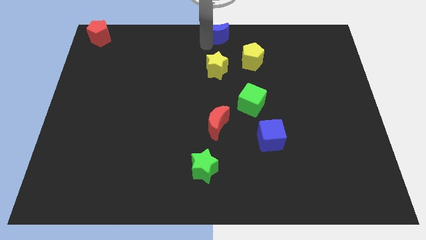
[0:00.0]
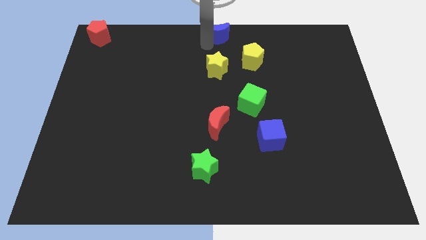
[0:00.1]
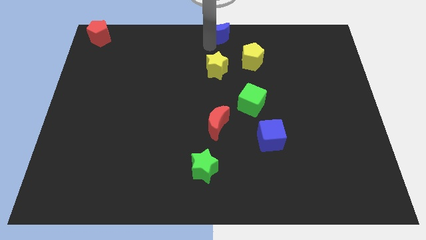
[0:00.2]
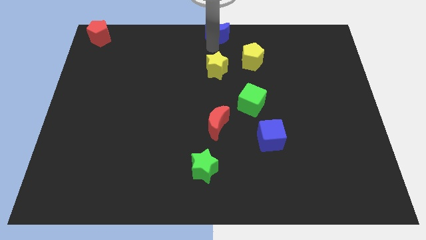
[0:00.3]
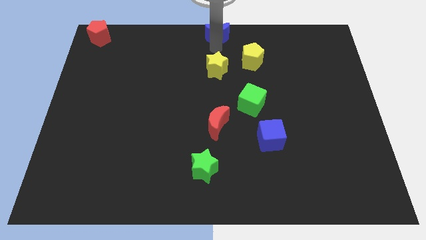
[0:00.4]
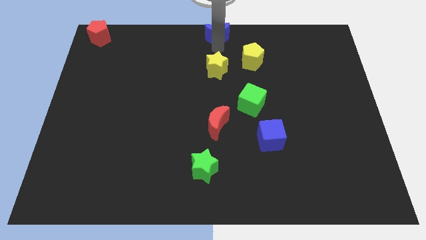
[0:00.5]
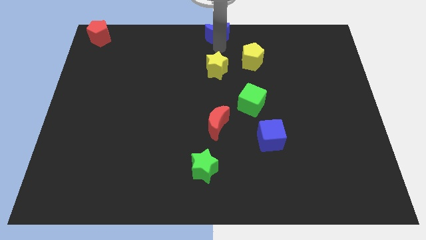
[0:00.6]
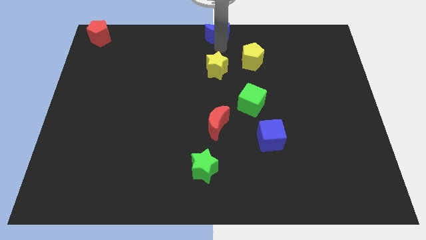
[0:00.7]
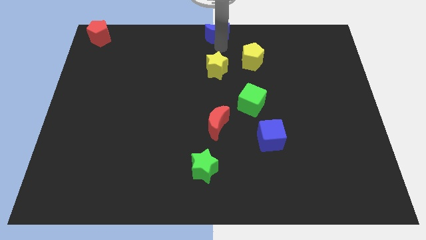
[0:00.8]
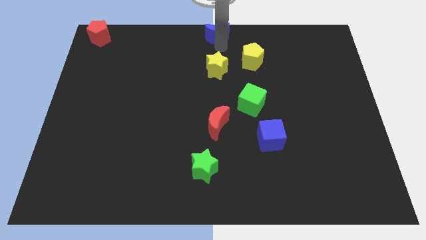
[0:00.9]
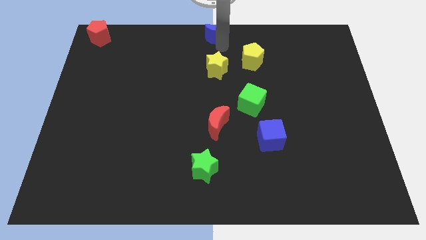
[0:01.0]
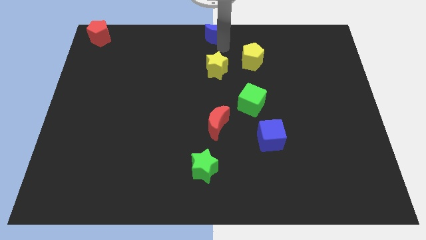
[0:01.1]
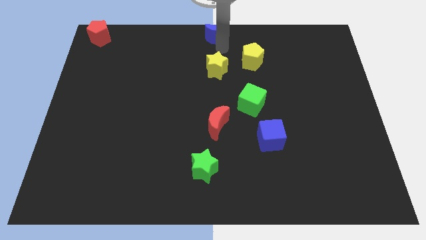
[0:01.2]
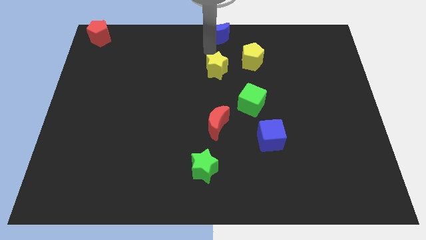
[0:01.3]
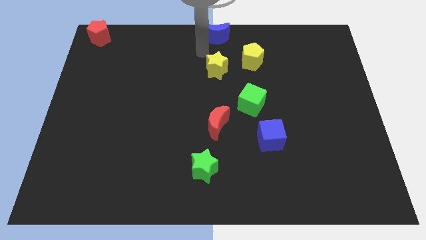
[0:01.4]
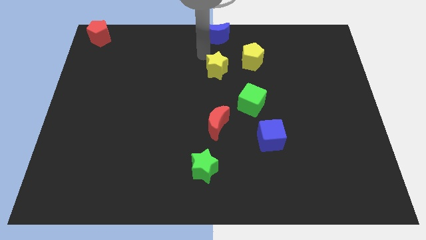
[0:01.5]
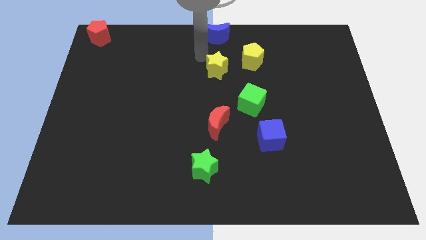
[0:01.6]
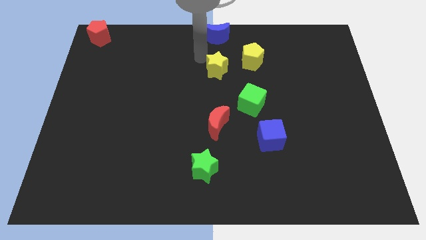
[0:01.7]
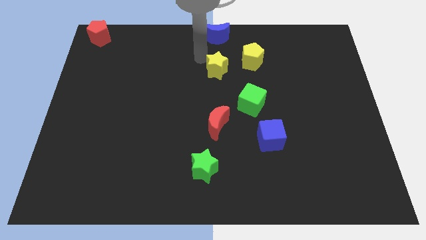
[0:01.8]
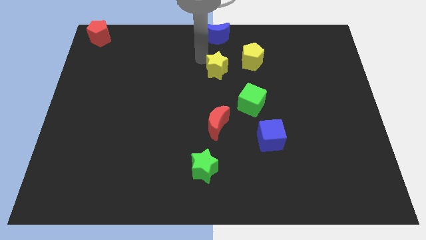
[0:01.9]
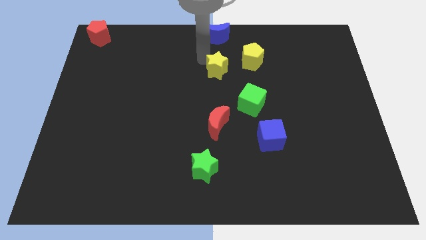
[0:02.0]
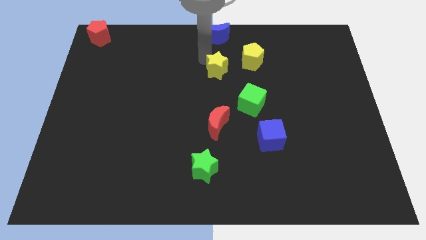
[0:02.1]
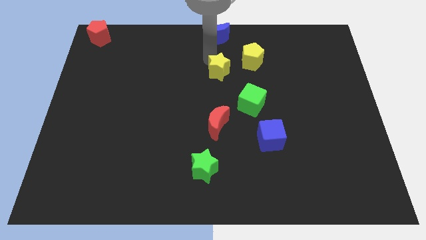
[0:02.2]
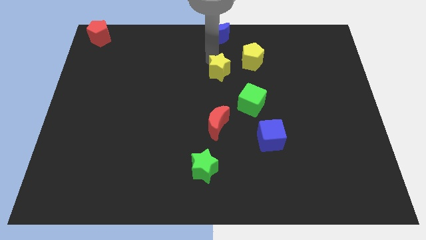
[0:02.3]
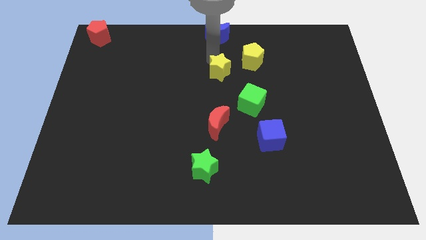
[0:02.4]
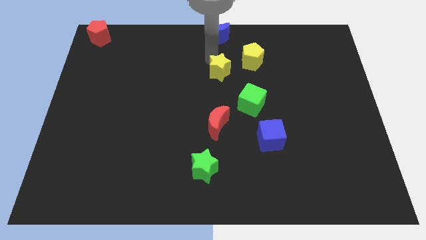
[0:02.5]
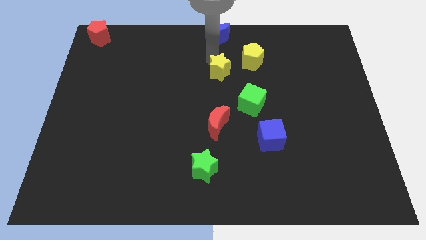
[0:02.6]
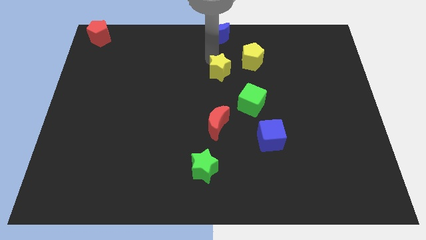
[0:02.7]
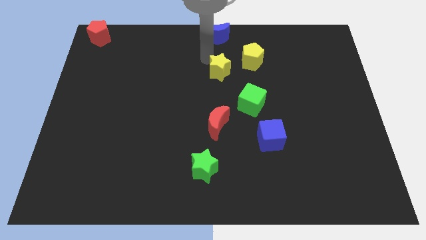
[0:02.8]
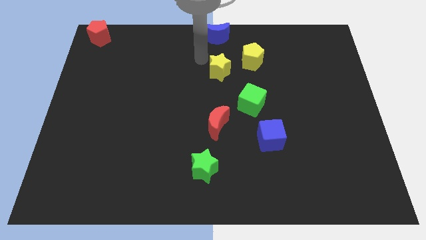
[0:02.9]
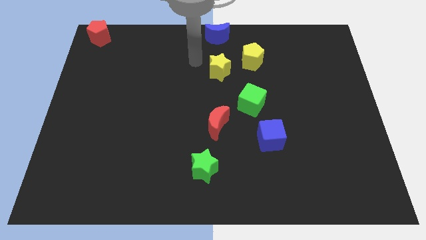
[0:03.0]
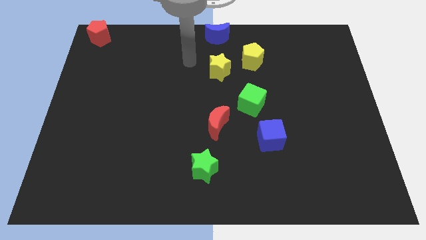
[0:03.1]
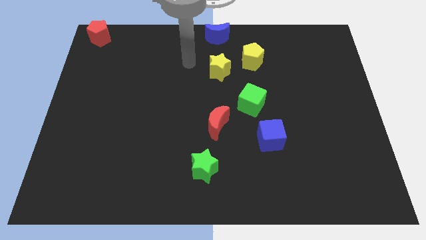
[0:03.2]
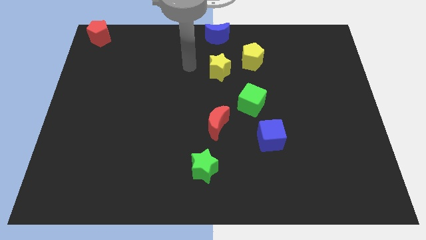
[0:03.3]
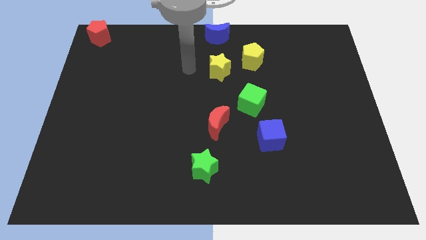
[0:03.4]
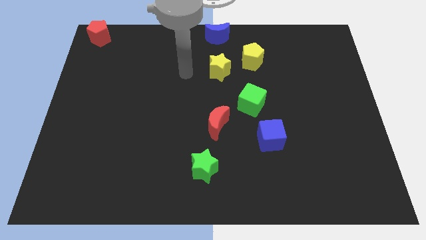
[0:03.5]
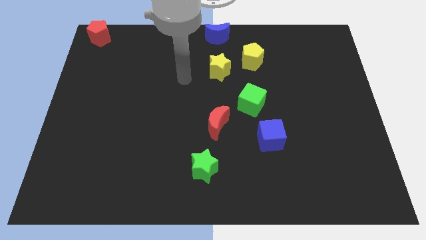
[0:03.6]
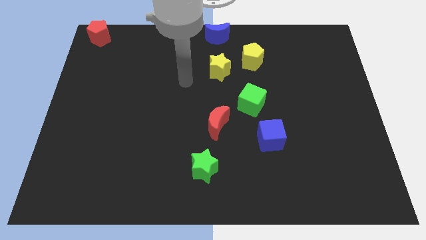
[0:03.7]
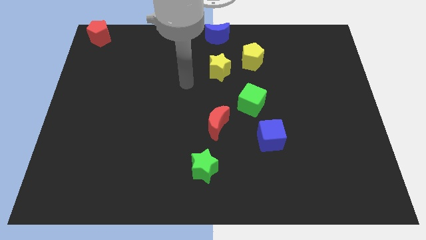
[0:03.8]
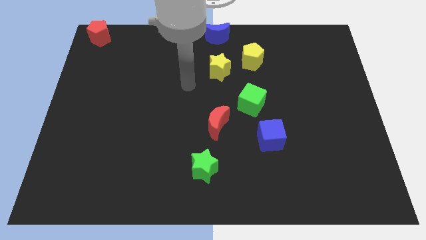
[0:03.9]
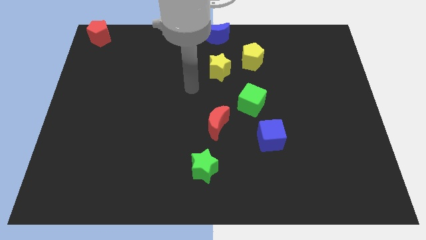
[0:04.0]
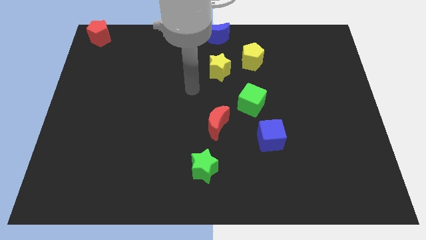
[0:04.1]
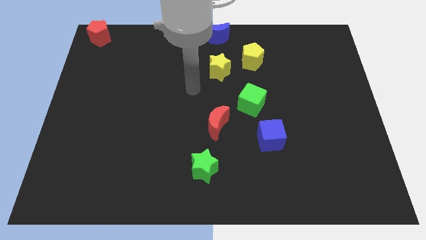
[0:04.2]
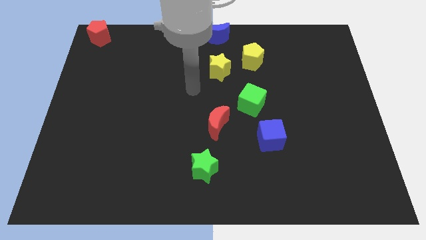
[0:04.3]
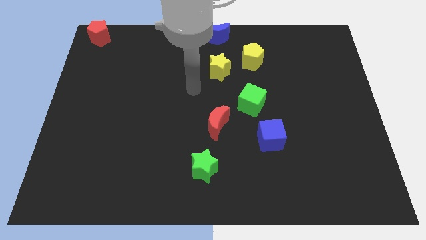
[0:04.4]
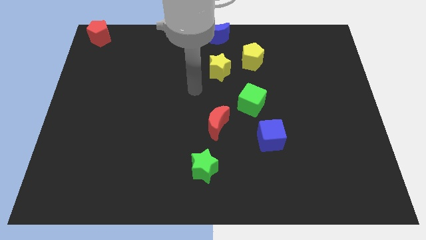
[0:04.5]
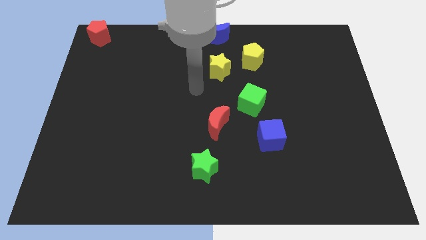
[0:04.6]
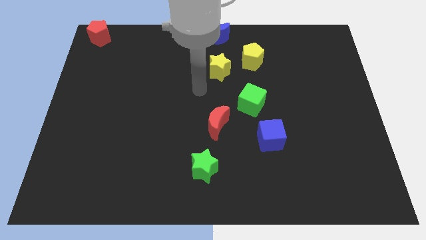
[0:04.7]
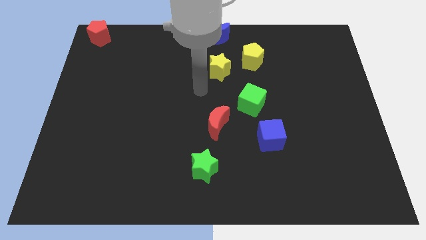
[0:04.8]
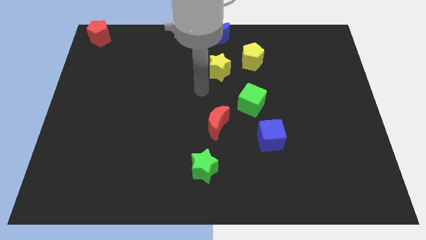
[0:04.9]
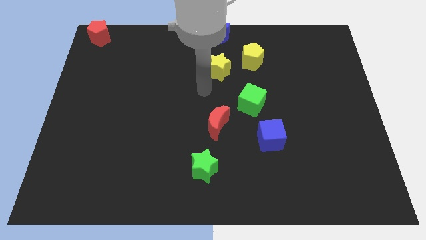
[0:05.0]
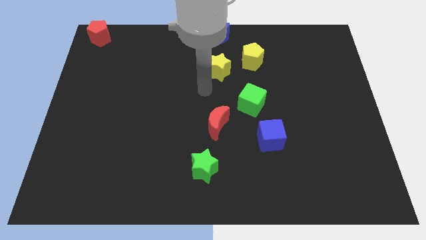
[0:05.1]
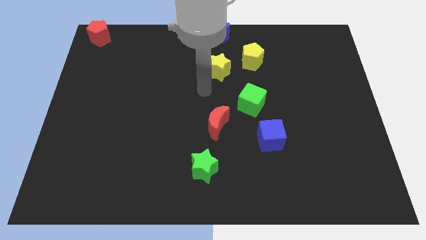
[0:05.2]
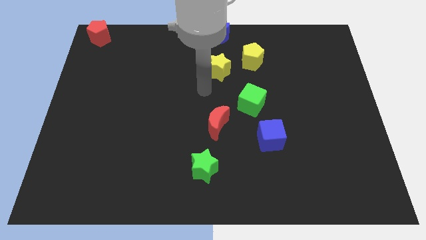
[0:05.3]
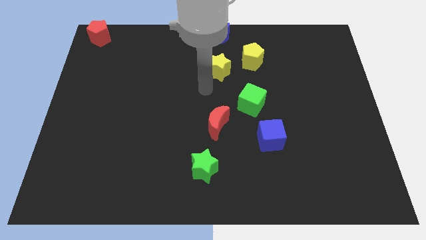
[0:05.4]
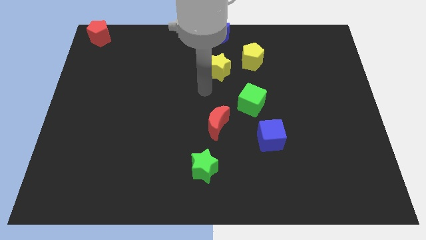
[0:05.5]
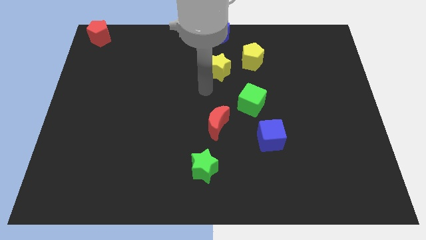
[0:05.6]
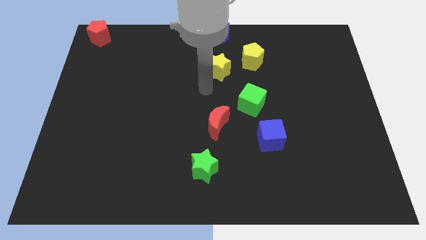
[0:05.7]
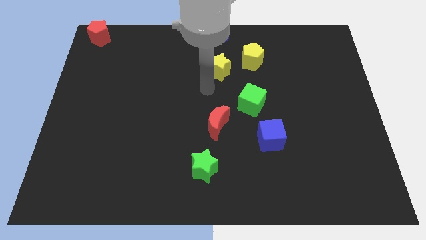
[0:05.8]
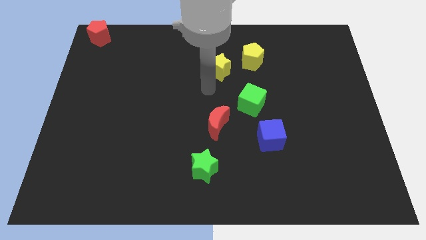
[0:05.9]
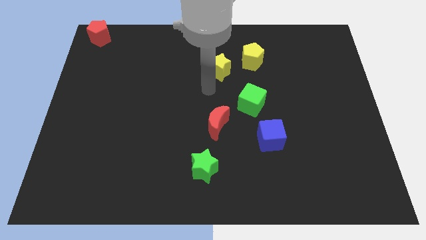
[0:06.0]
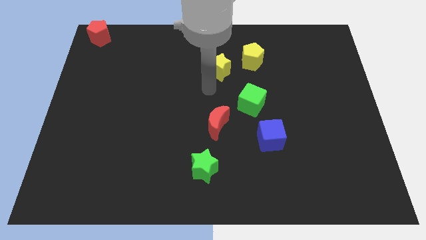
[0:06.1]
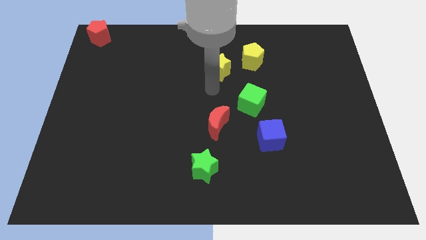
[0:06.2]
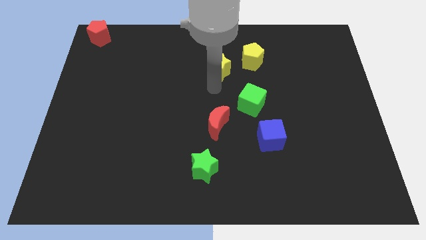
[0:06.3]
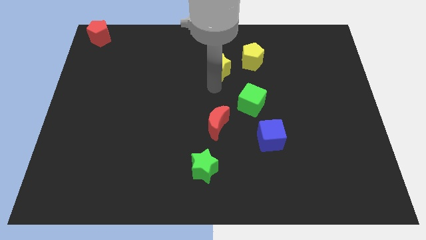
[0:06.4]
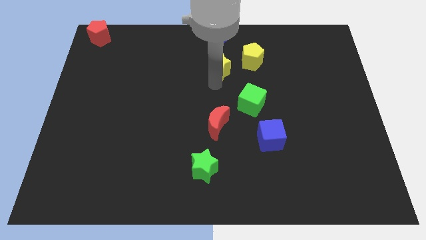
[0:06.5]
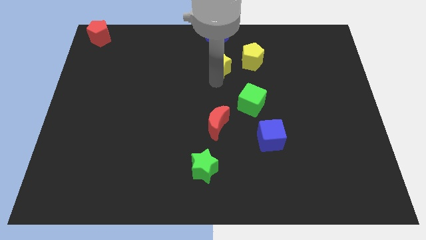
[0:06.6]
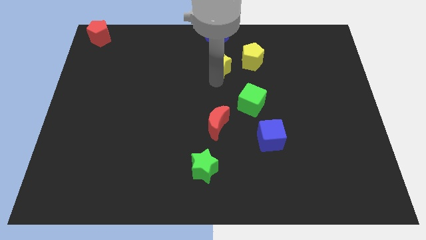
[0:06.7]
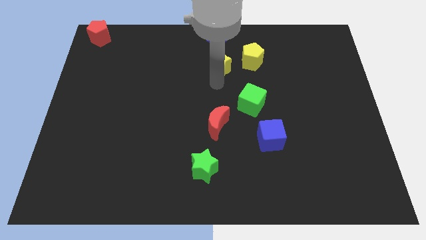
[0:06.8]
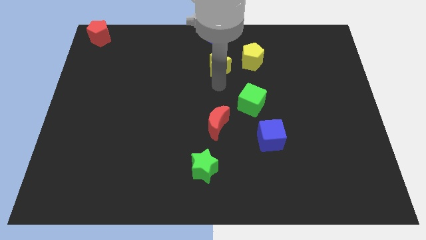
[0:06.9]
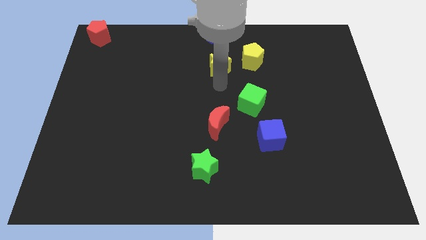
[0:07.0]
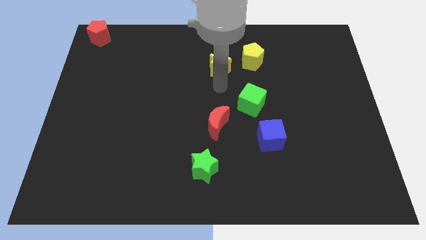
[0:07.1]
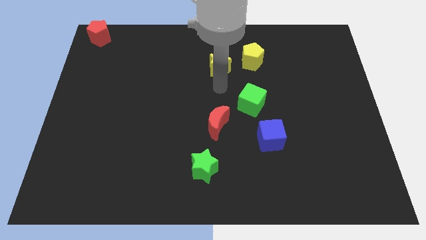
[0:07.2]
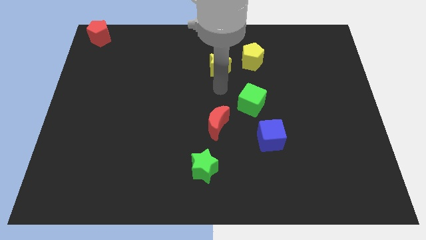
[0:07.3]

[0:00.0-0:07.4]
move your arm towards the yellow star on the top center of the board

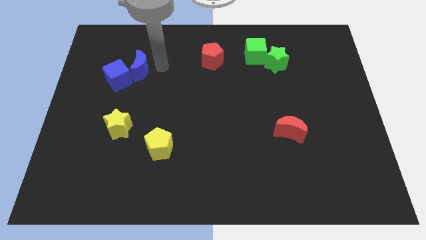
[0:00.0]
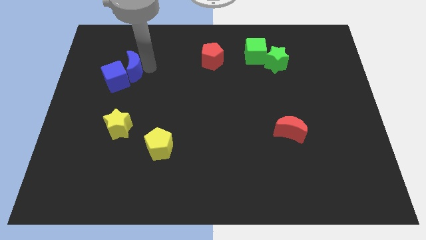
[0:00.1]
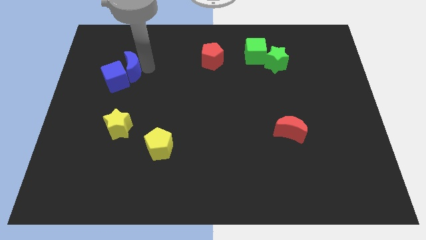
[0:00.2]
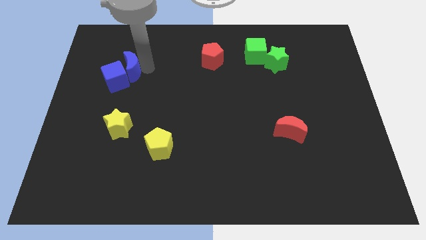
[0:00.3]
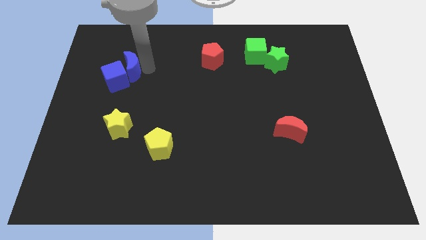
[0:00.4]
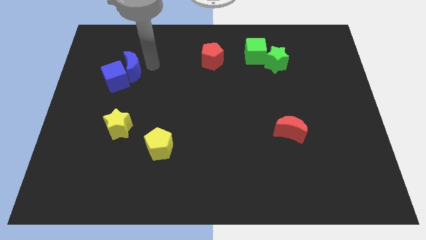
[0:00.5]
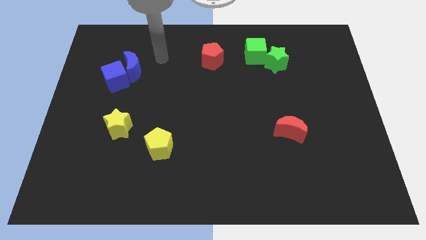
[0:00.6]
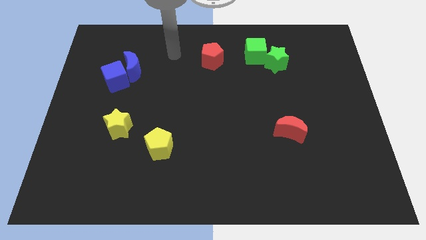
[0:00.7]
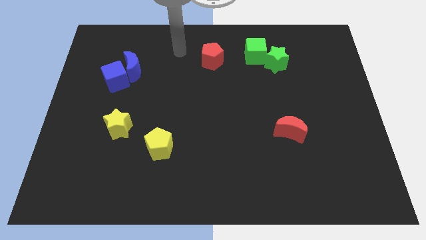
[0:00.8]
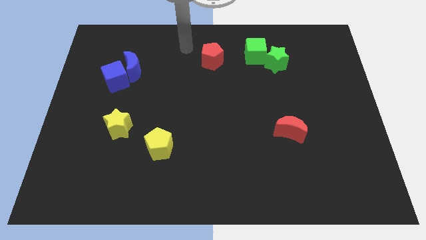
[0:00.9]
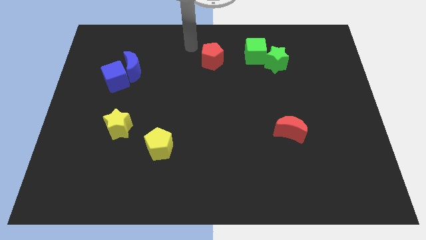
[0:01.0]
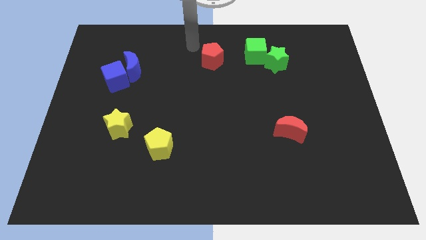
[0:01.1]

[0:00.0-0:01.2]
push blue moon into blue cube

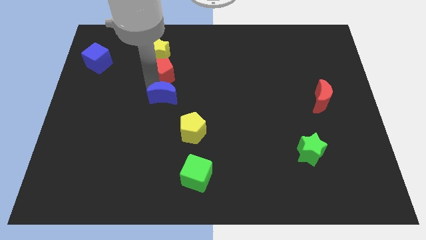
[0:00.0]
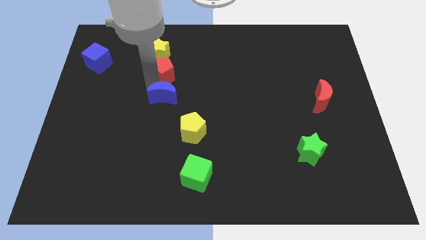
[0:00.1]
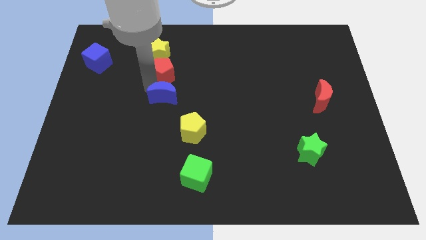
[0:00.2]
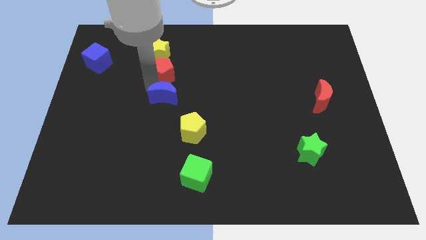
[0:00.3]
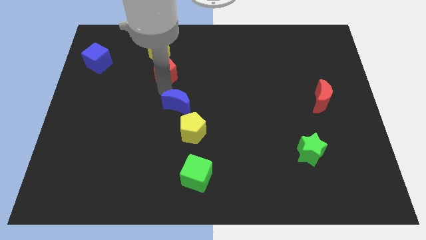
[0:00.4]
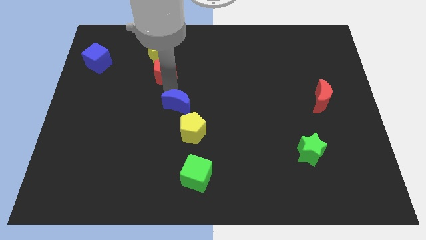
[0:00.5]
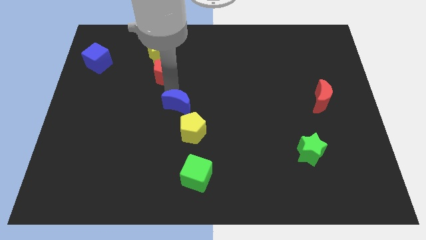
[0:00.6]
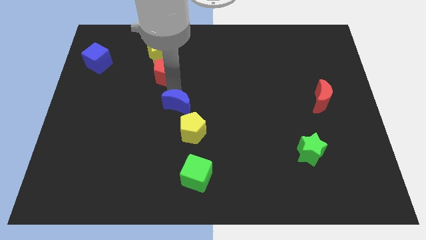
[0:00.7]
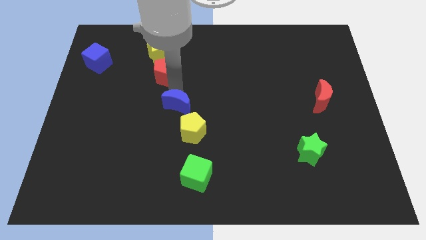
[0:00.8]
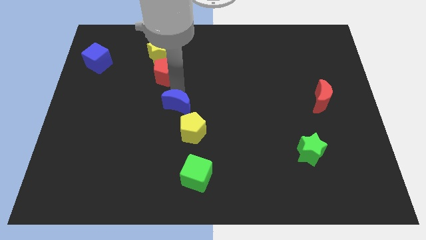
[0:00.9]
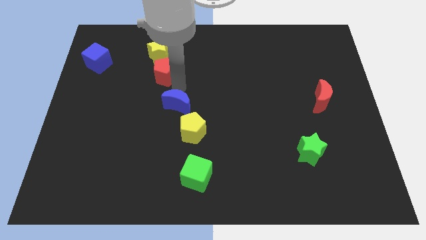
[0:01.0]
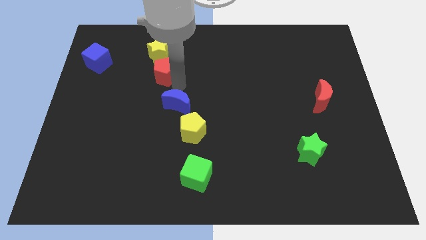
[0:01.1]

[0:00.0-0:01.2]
move blue crescent slightly down
